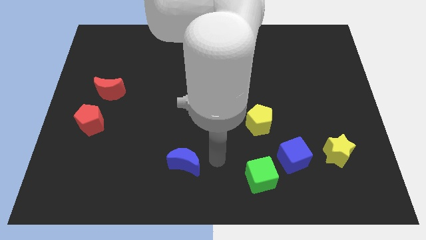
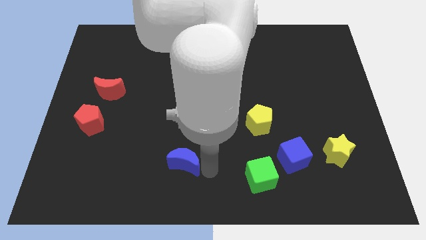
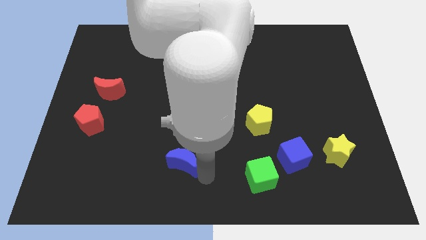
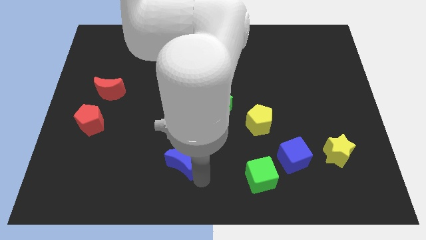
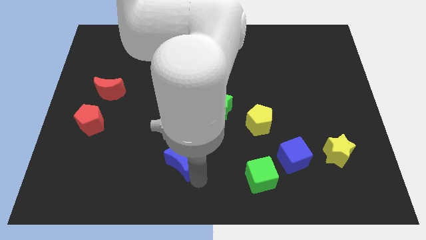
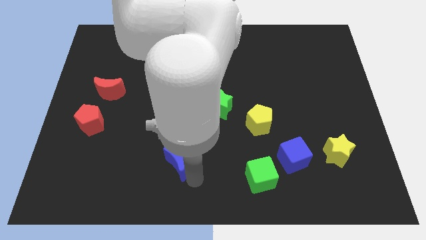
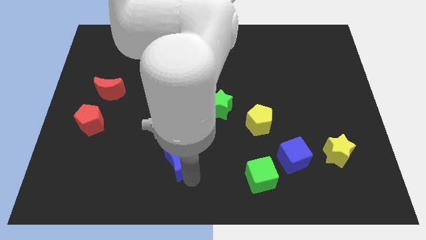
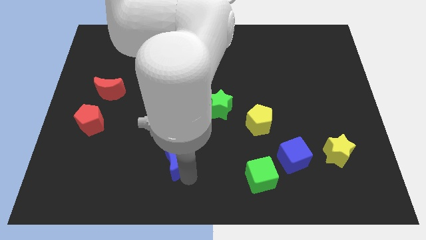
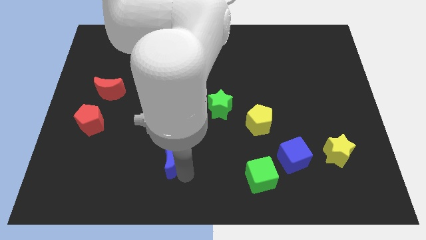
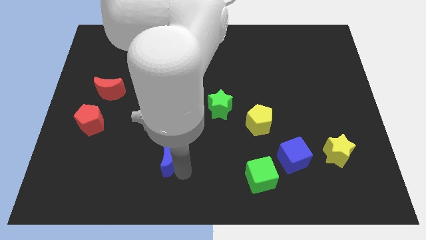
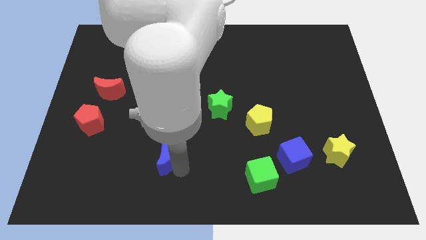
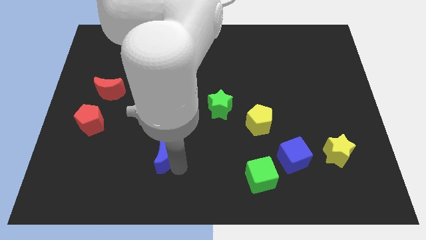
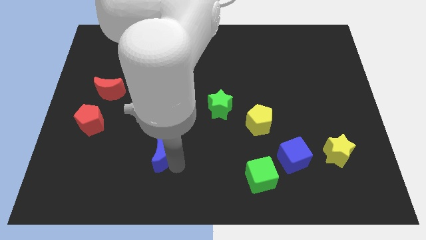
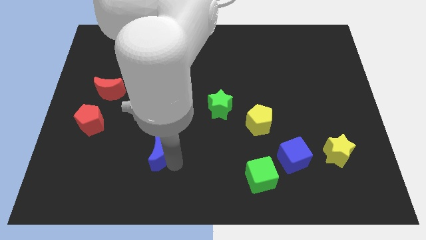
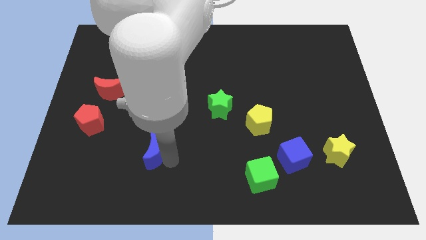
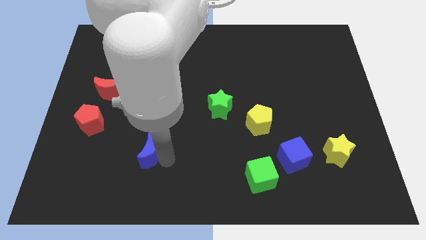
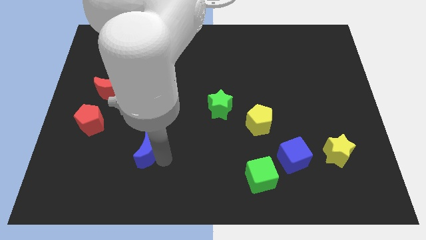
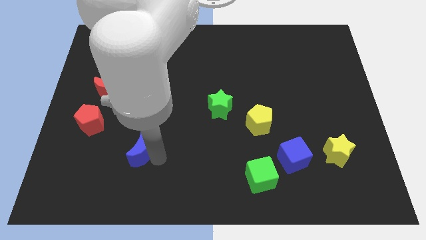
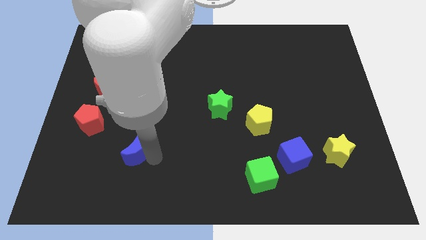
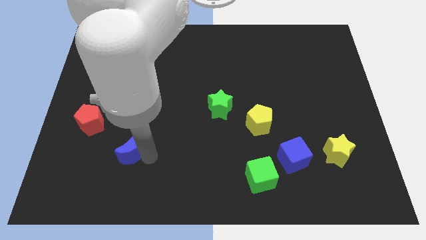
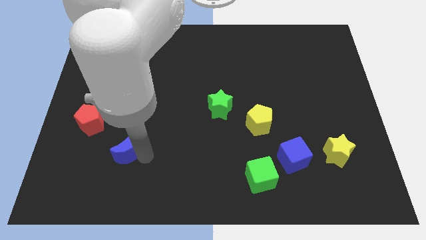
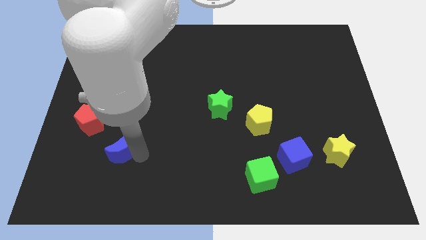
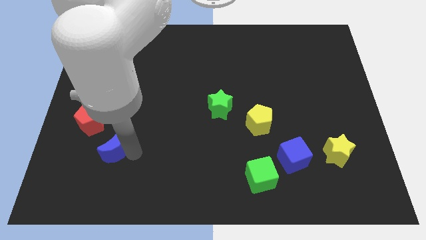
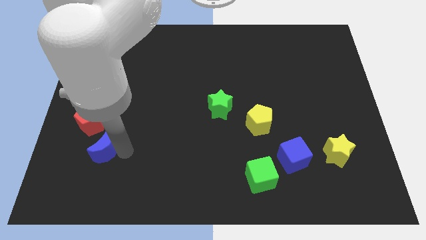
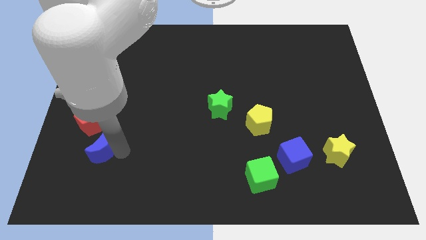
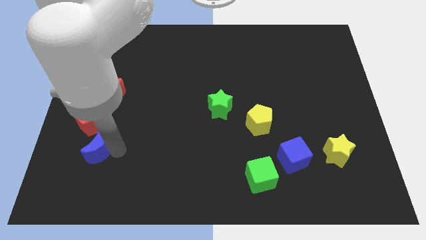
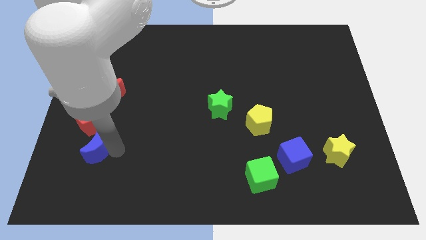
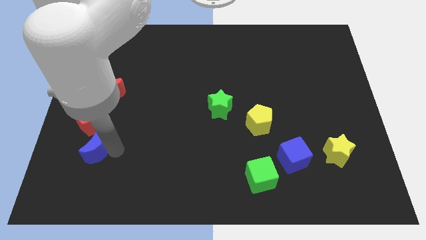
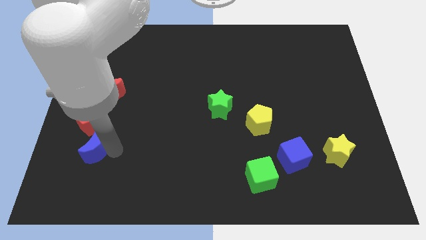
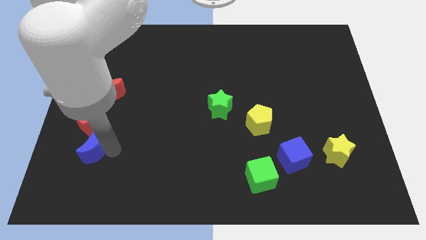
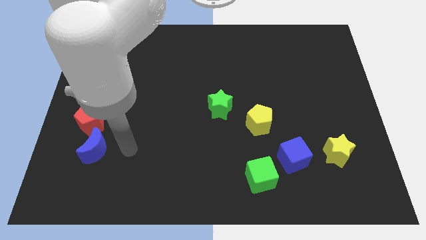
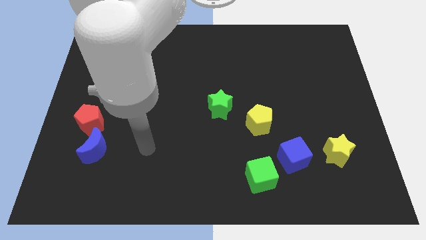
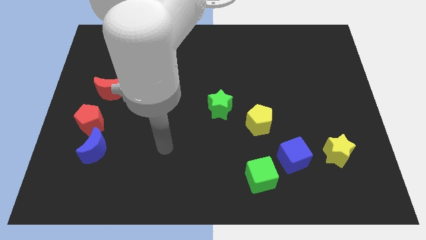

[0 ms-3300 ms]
push the blue moon below the red pentagon

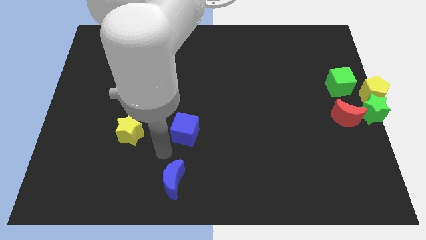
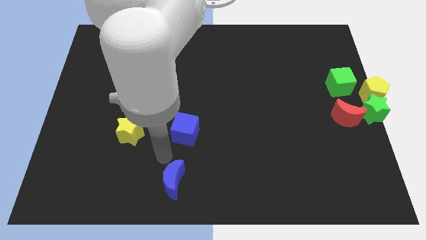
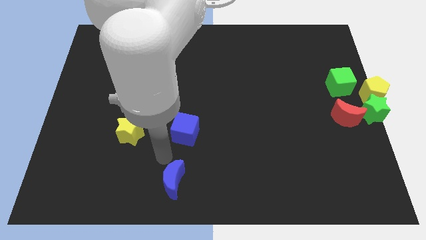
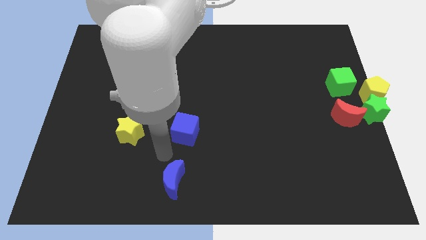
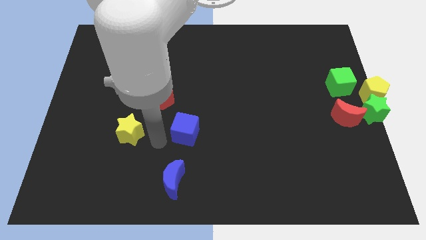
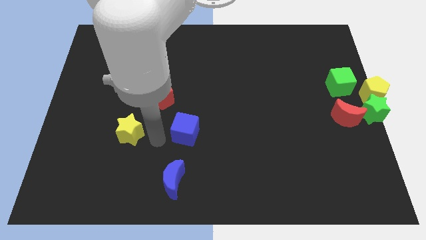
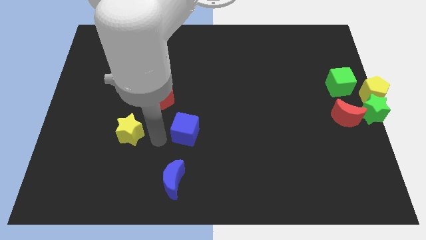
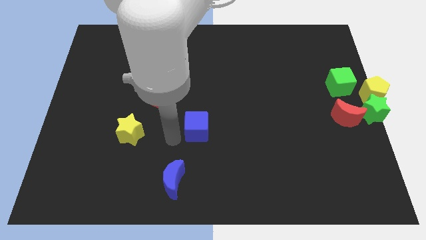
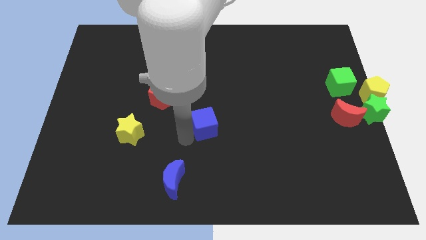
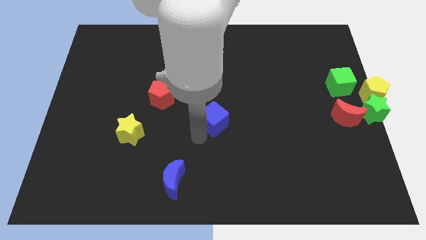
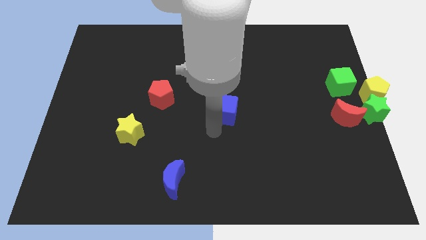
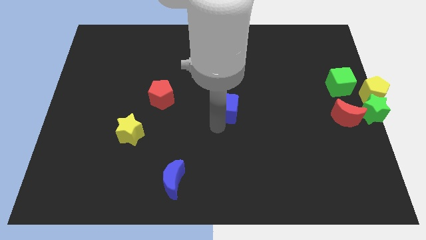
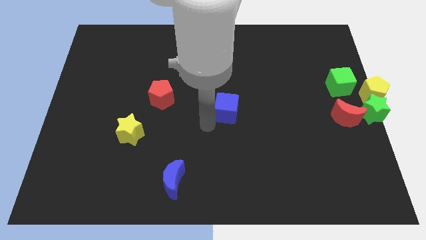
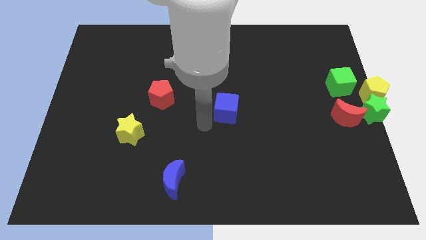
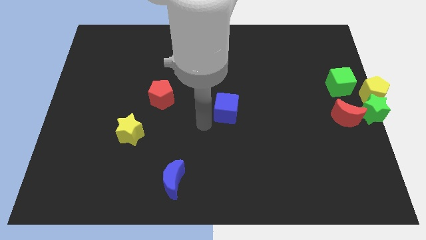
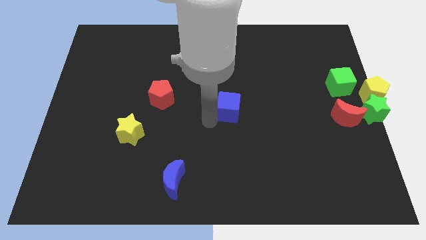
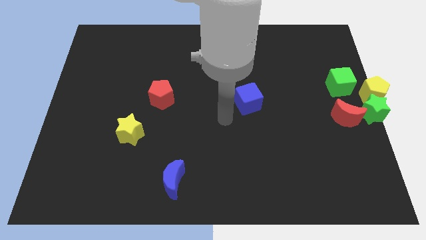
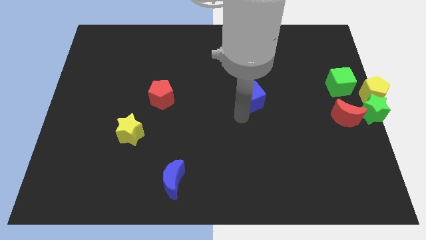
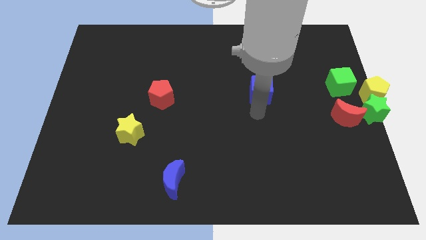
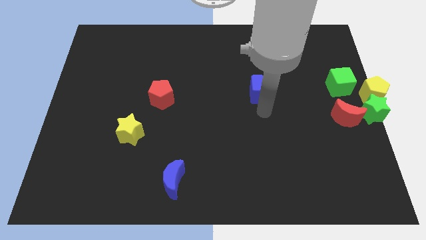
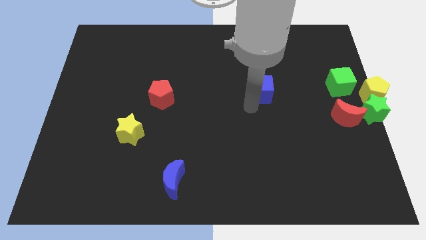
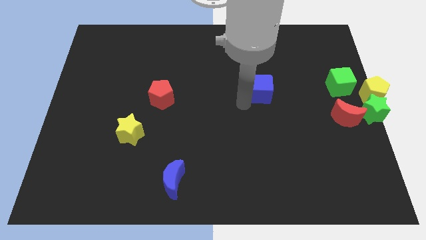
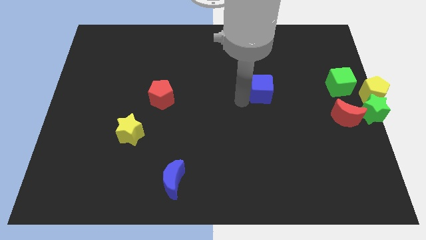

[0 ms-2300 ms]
push the blue cube towards the green cube

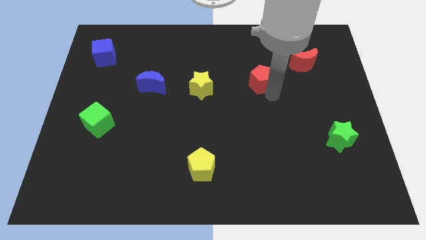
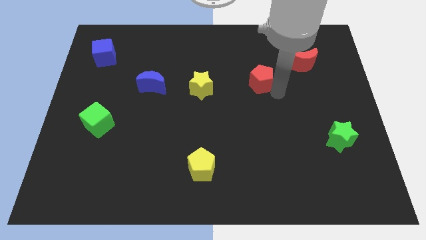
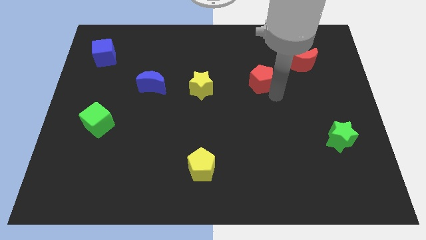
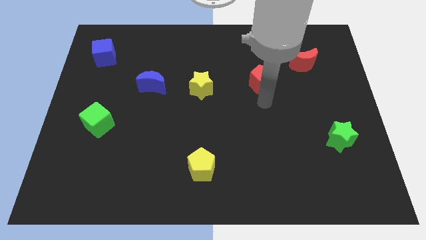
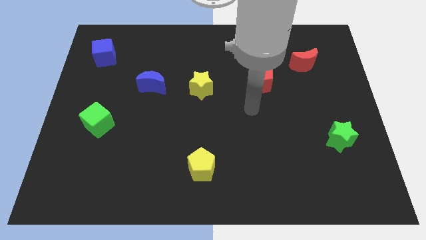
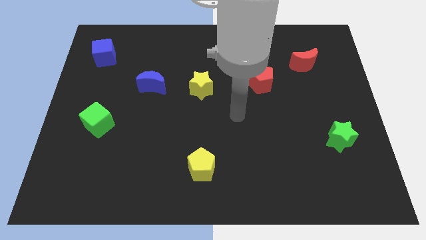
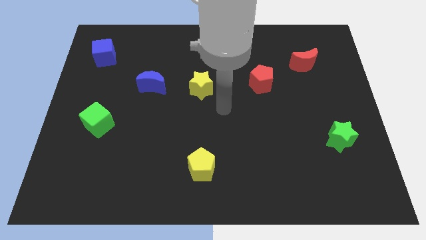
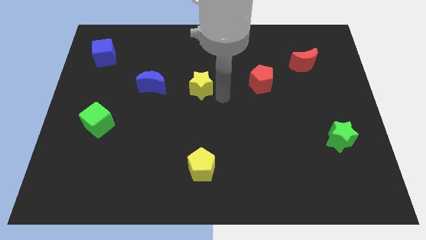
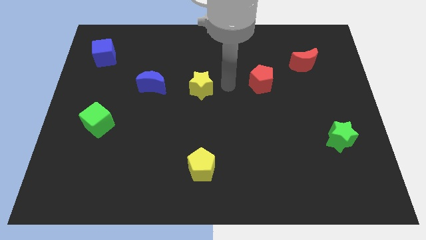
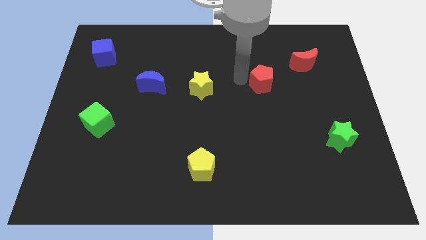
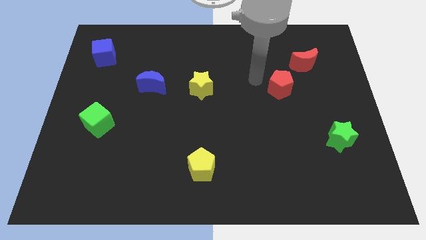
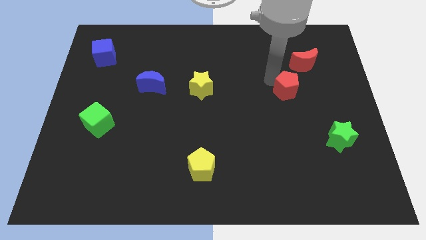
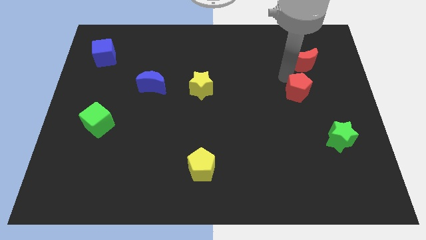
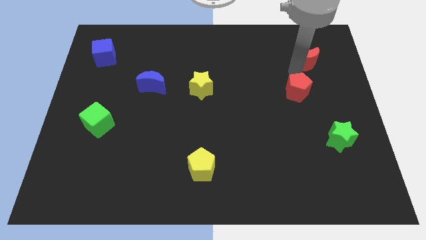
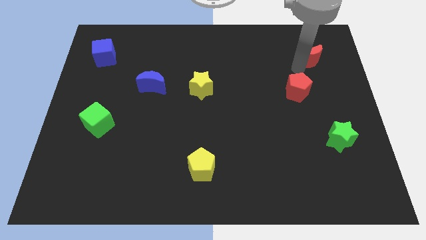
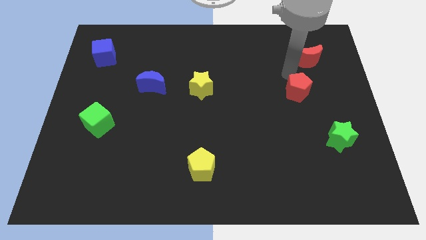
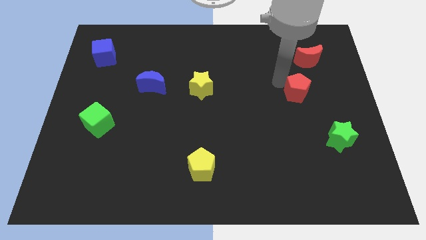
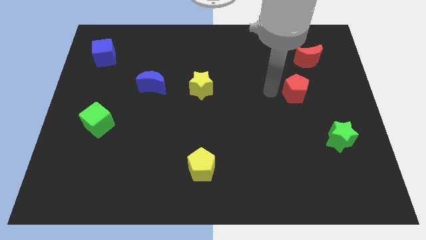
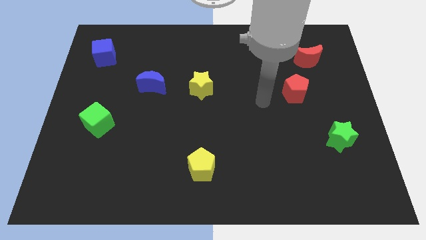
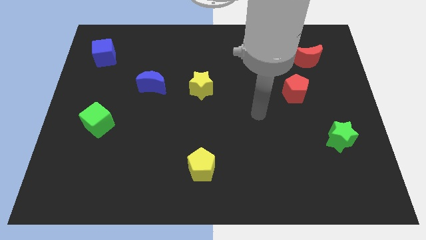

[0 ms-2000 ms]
move red pentagon towards right

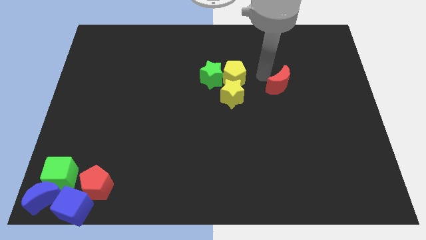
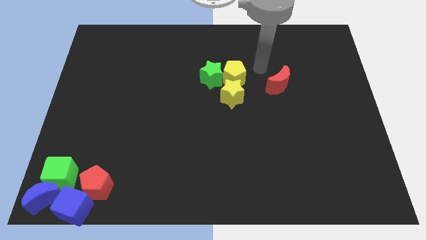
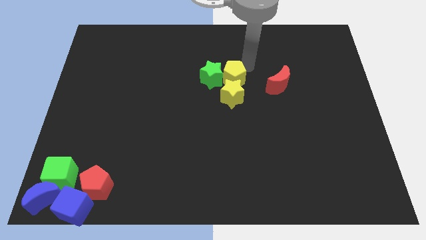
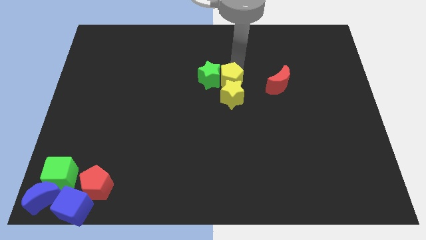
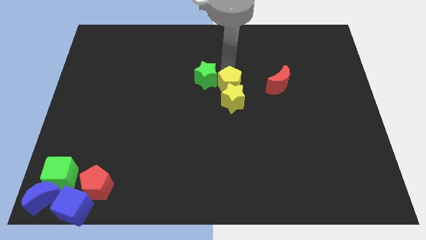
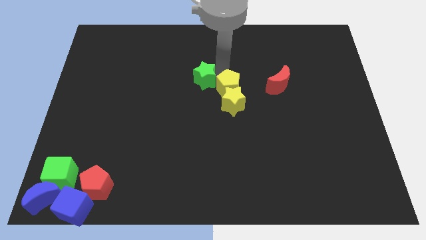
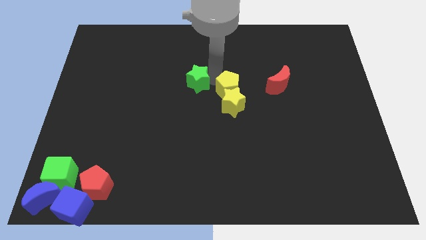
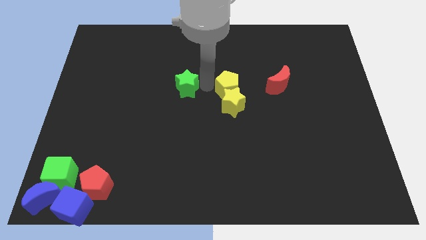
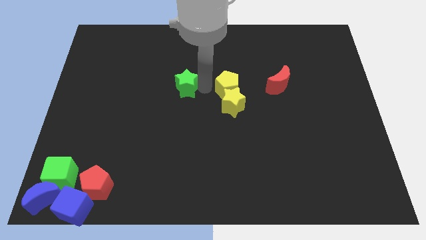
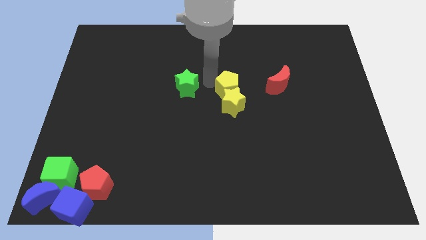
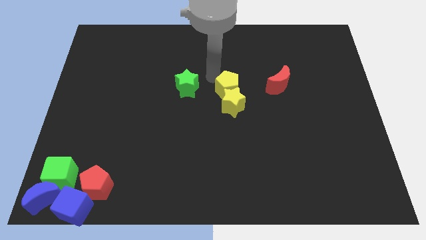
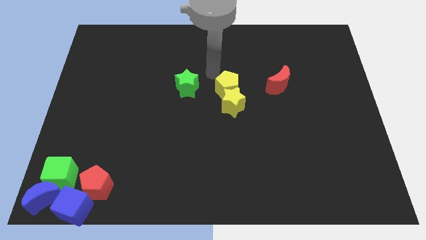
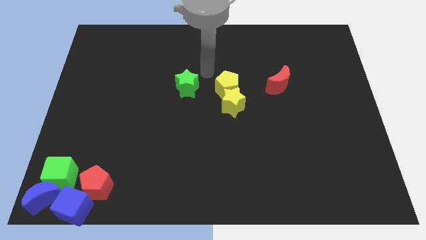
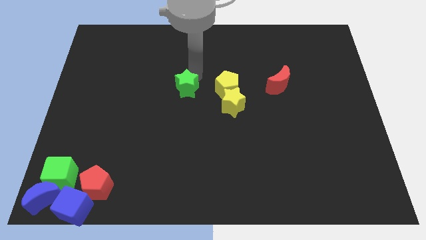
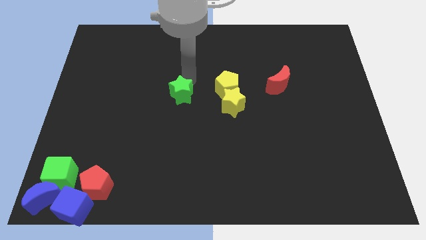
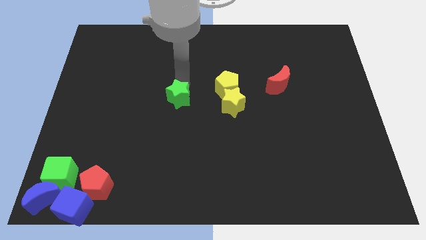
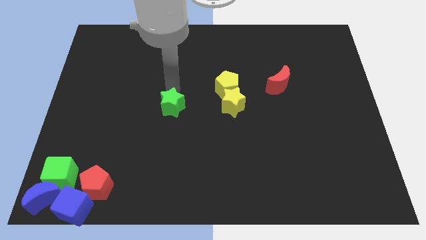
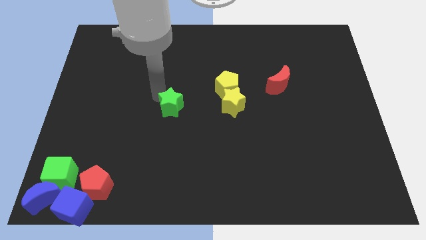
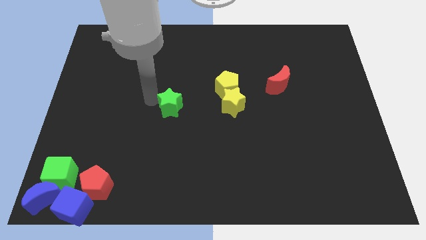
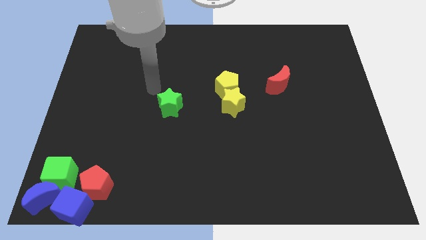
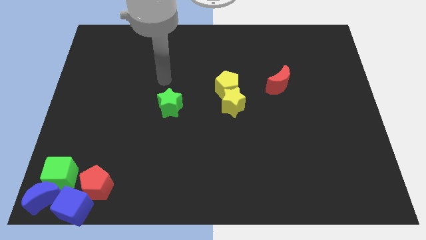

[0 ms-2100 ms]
place green star parallel to yellow star
